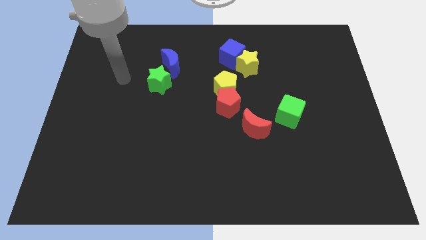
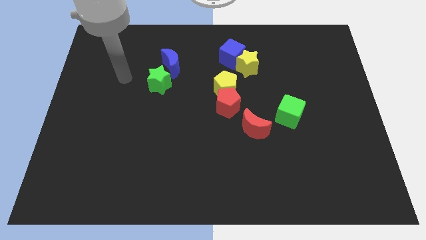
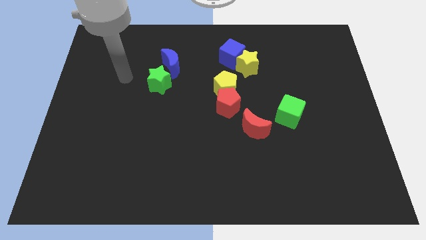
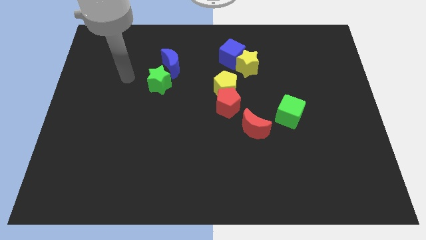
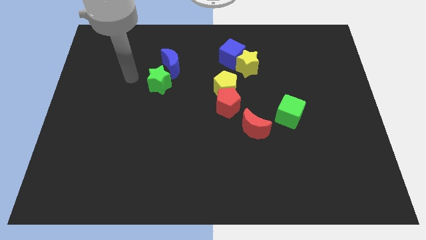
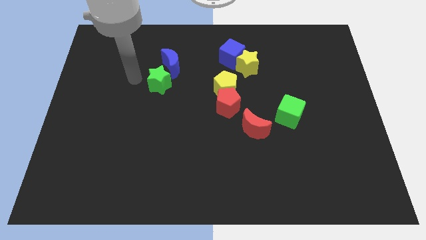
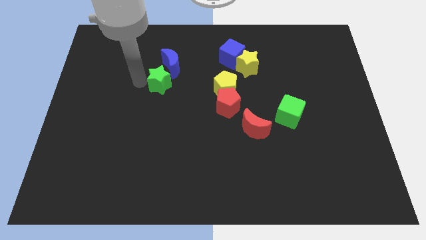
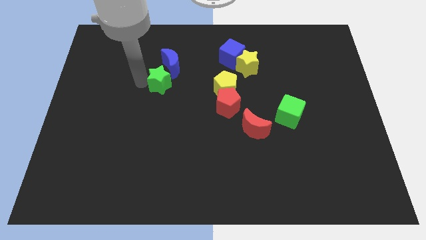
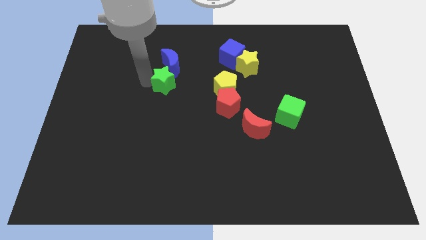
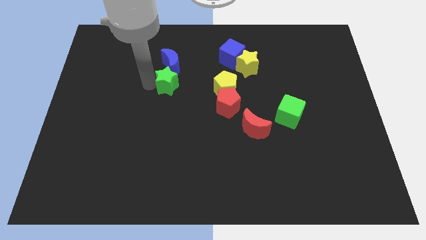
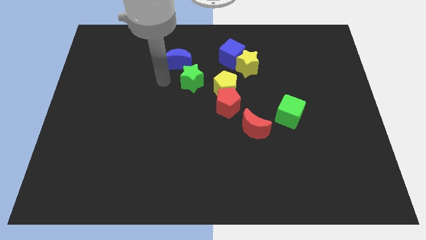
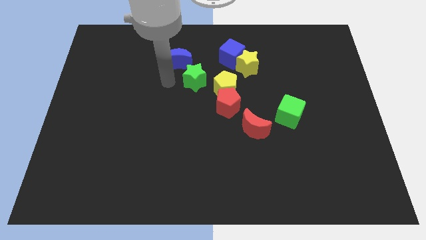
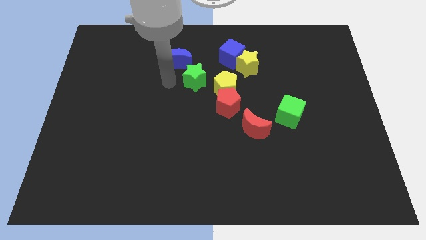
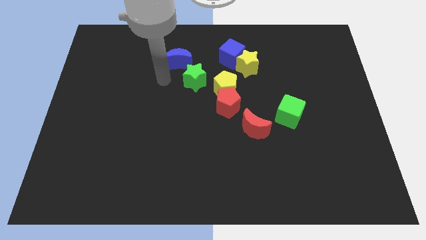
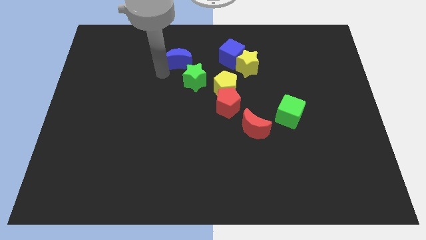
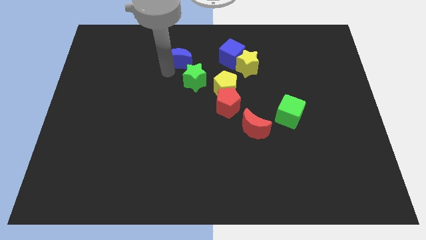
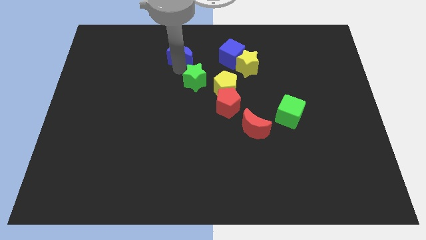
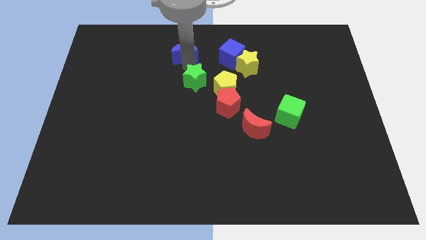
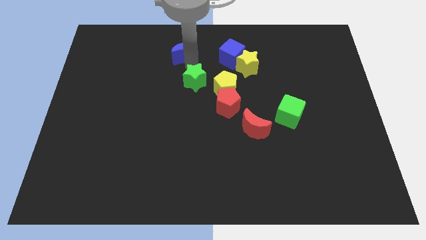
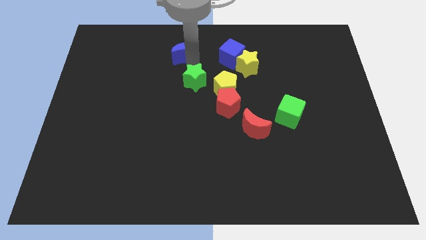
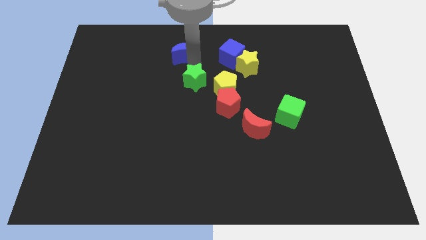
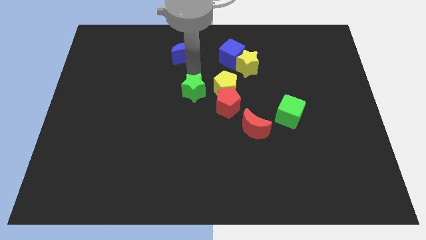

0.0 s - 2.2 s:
move the green star to the left of the yellow pentagon

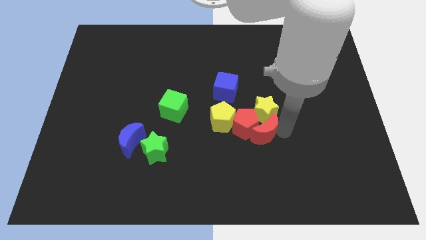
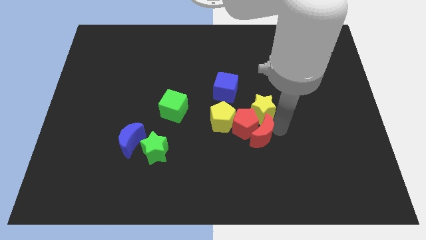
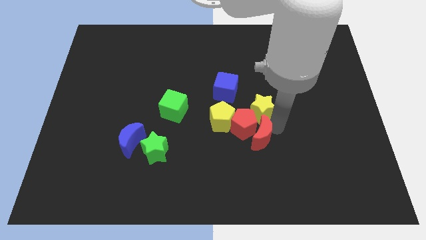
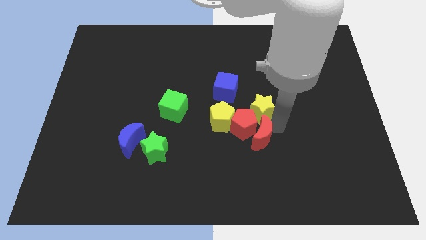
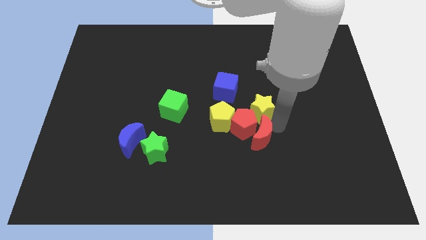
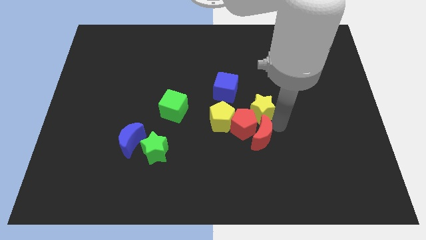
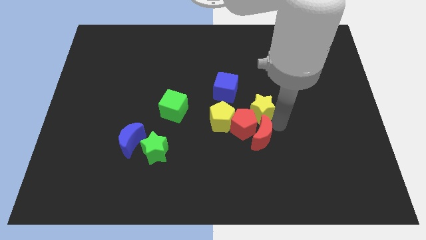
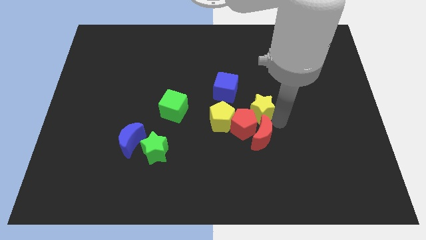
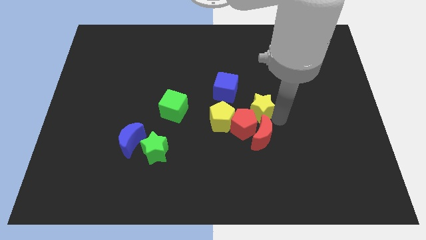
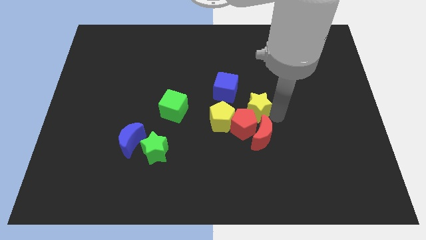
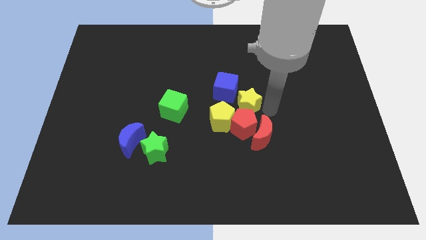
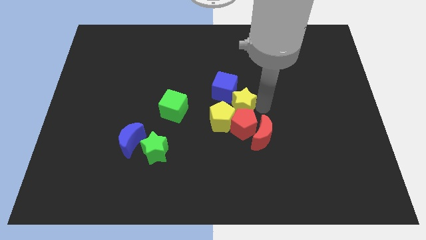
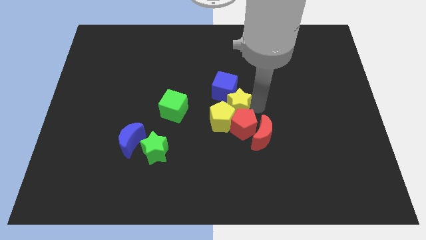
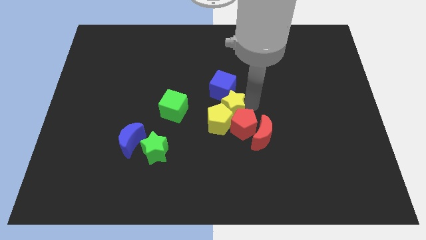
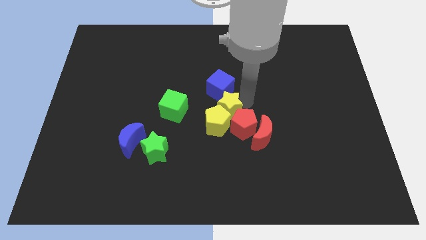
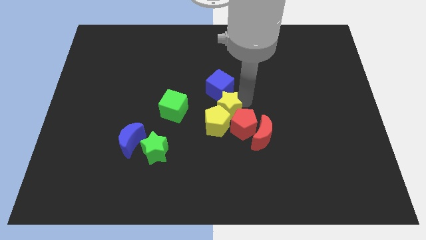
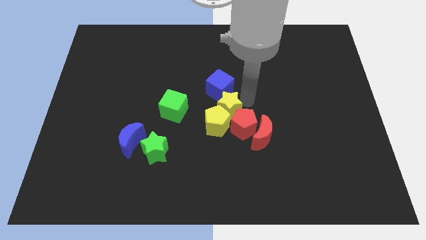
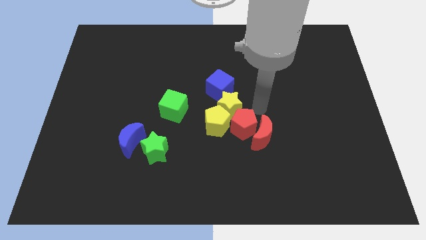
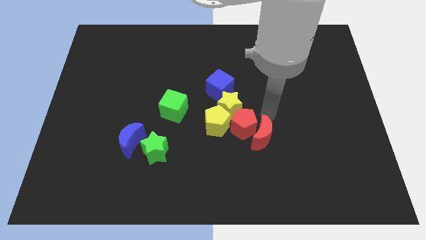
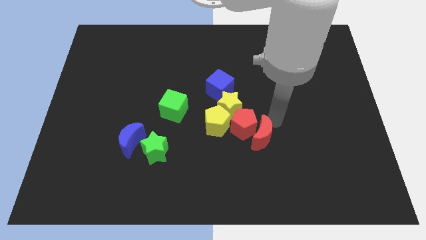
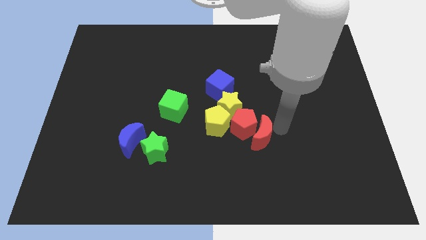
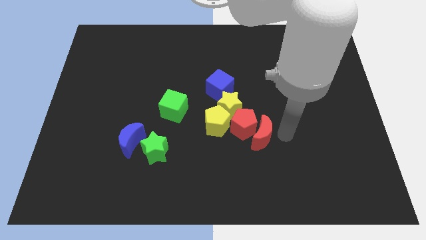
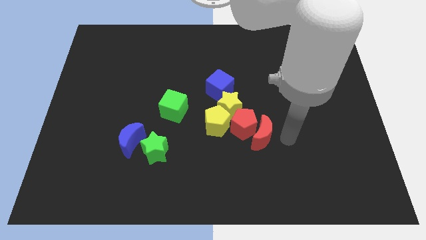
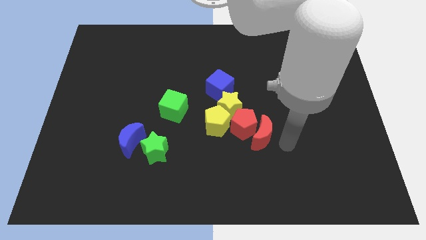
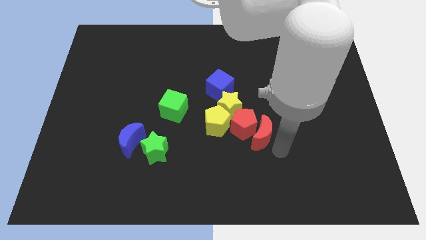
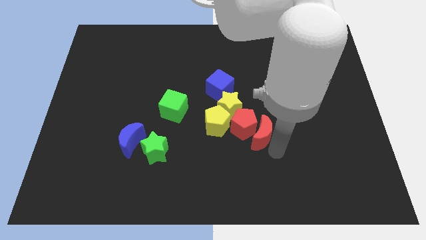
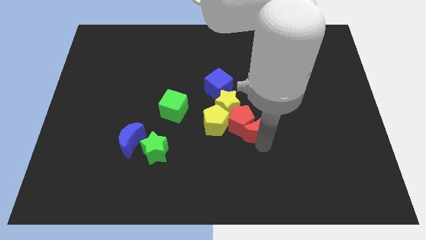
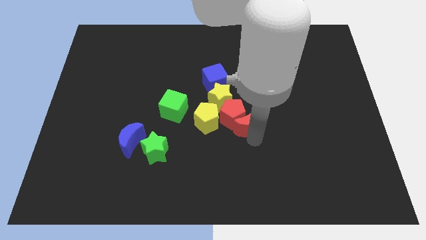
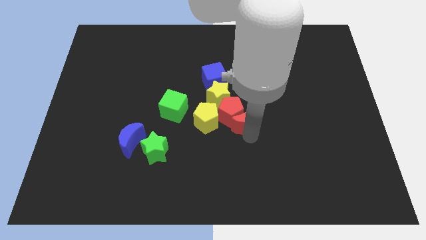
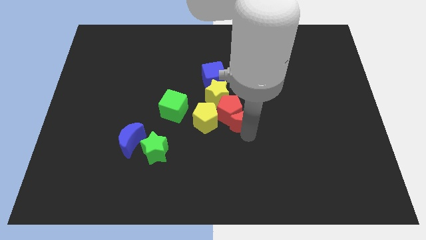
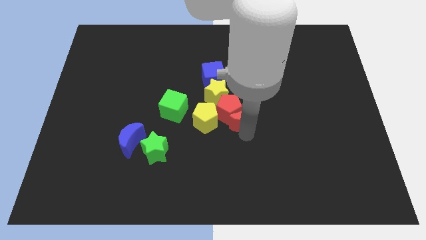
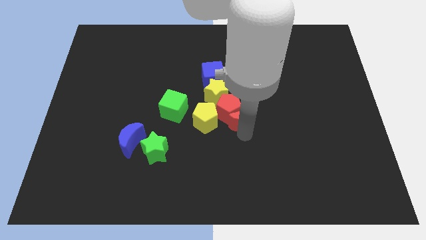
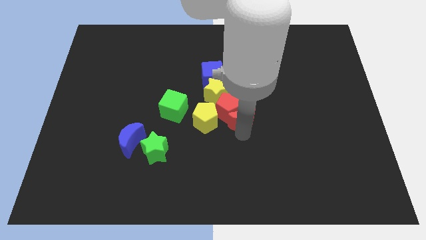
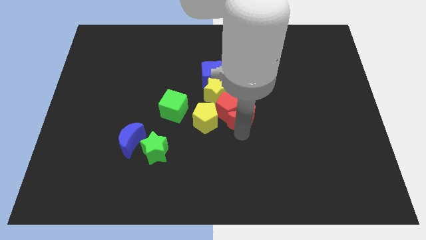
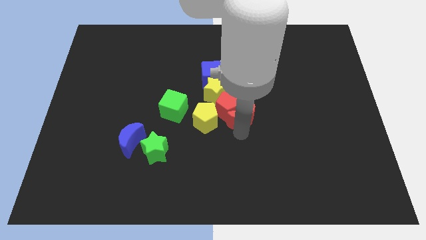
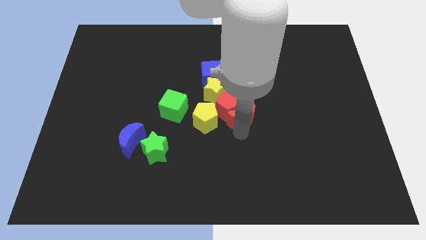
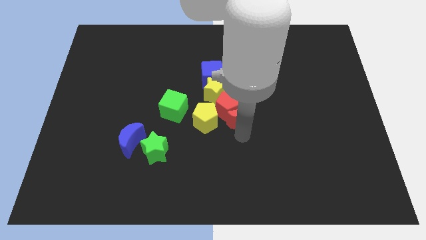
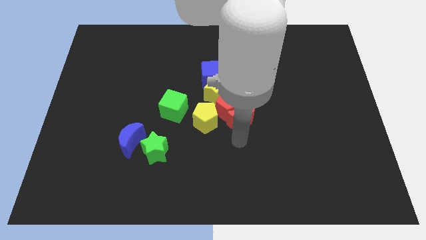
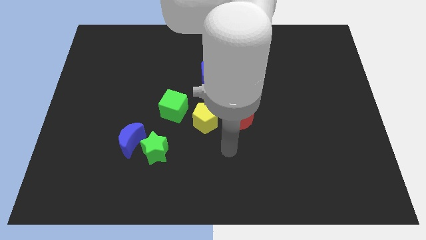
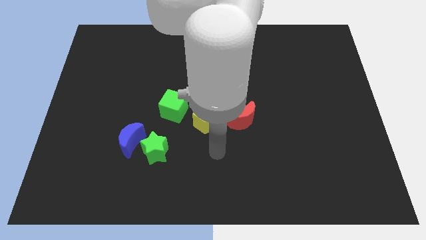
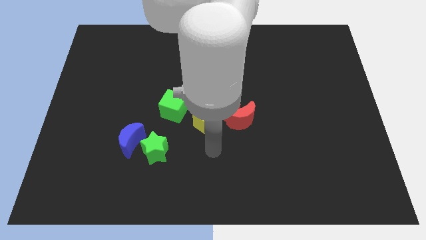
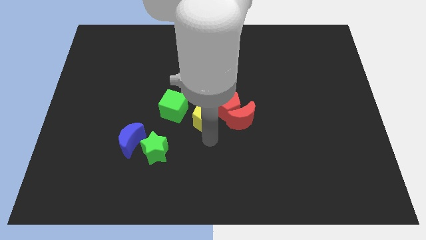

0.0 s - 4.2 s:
push group of objects to the center of the board

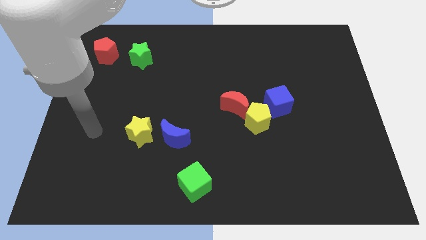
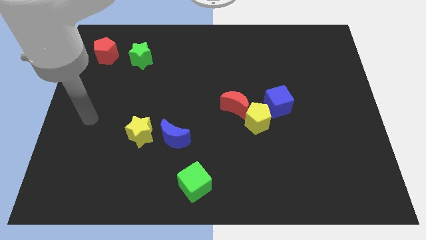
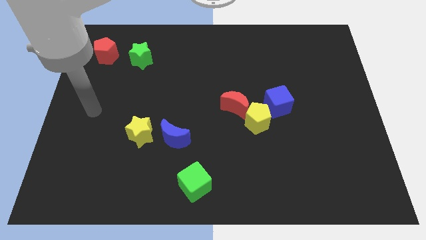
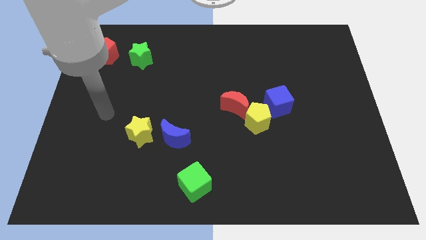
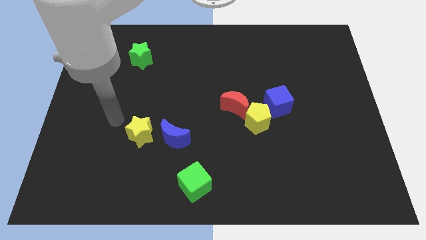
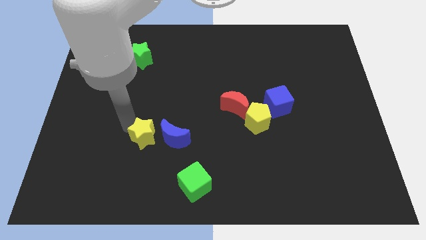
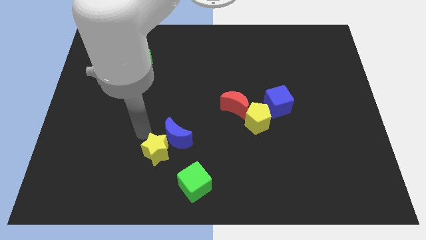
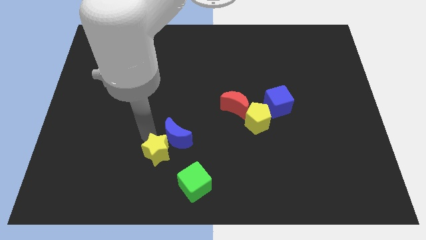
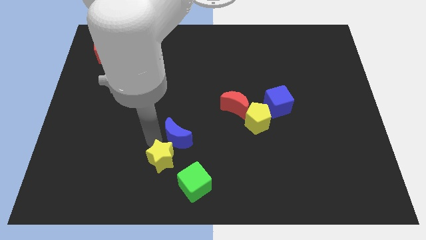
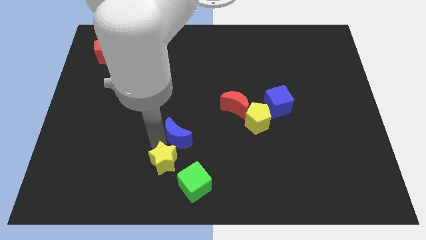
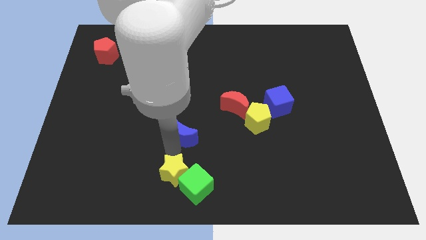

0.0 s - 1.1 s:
push yellow star into green cube

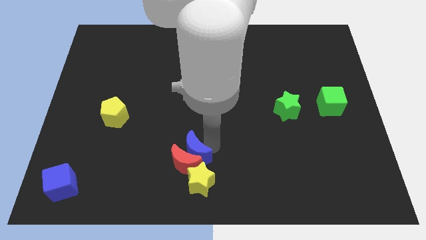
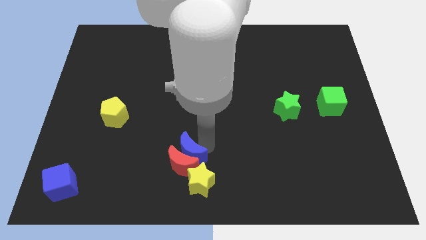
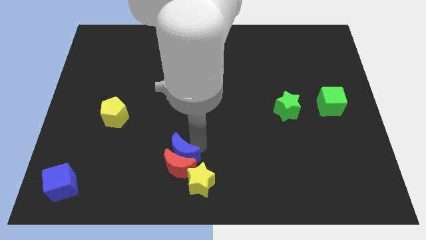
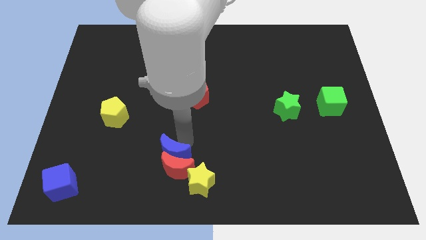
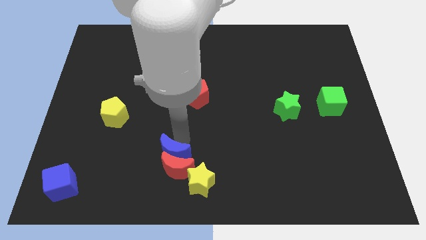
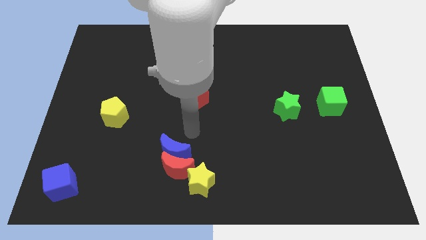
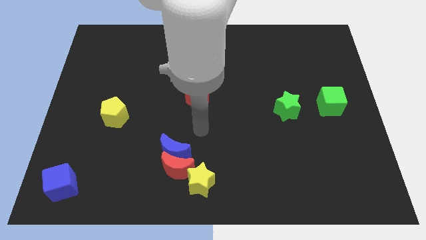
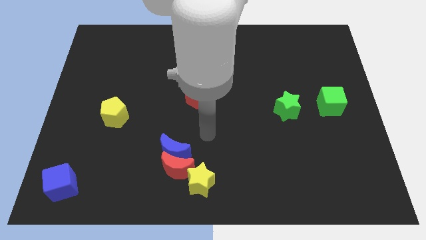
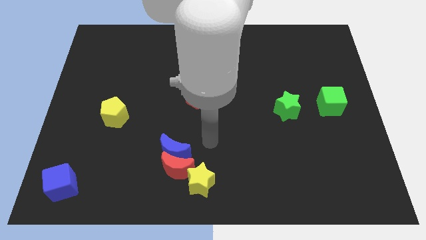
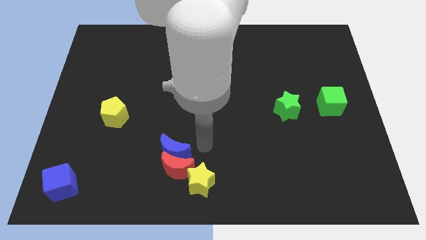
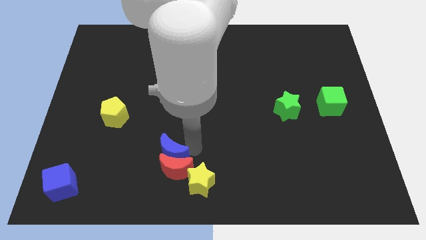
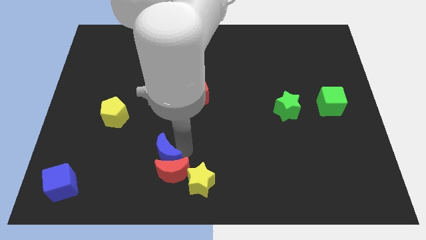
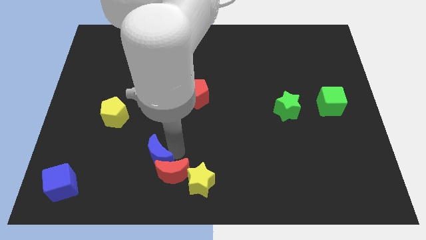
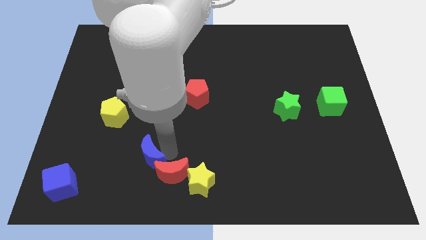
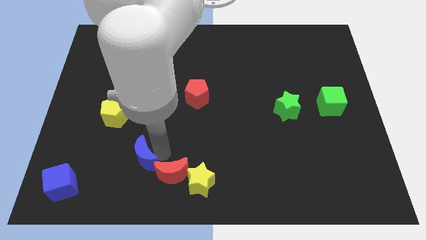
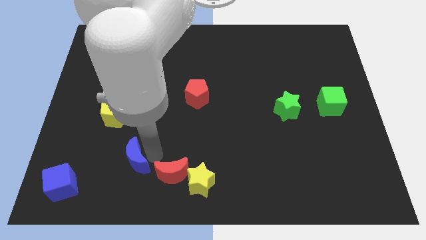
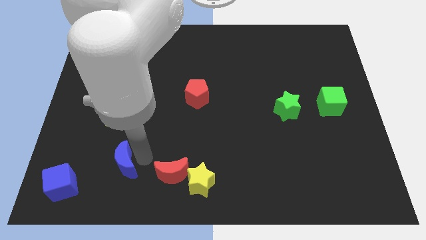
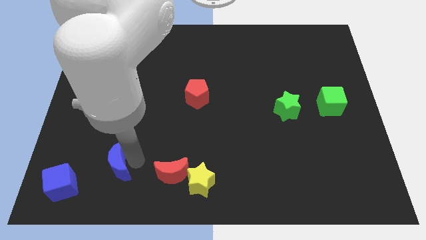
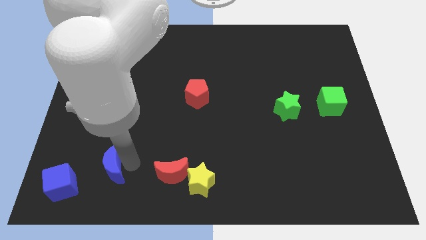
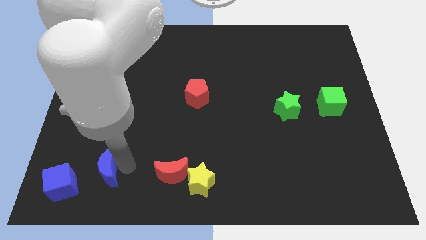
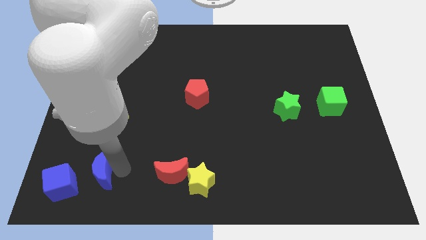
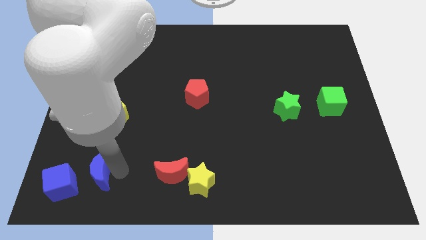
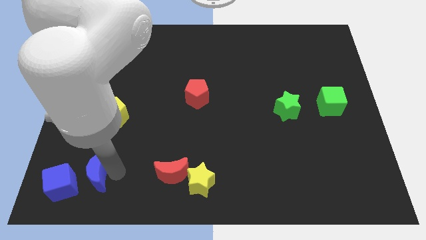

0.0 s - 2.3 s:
place the blue moon in between the blue cube and red moon
